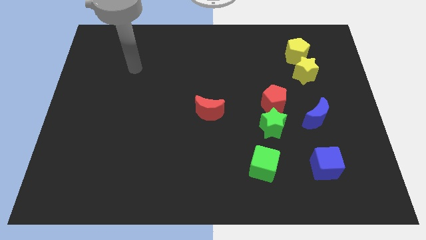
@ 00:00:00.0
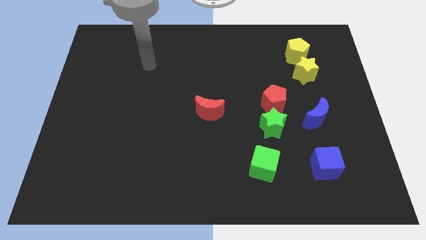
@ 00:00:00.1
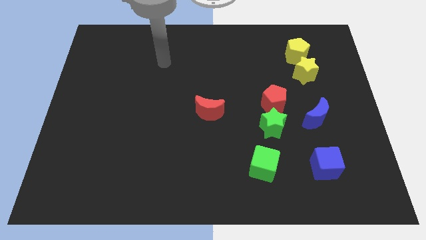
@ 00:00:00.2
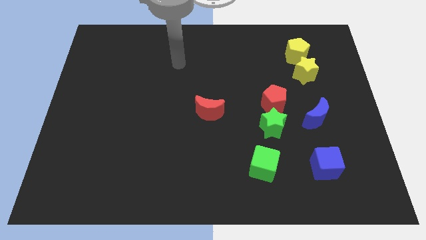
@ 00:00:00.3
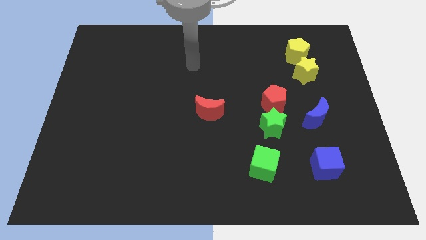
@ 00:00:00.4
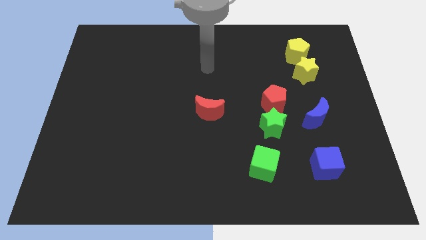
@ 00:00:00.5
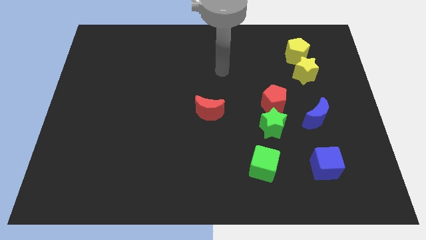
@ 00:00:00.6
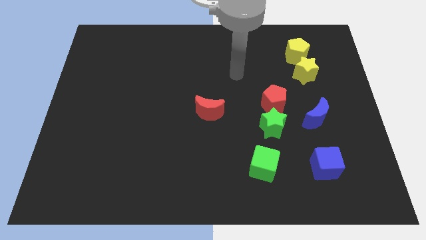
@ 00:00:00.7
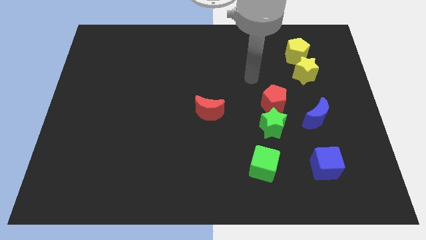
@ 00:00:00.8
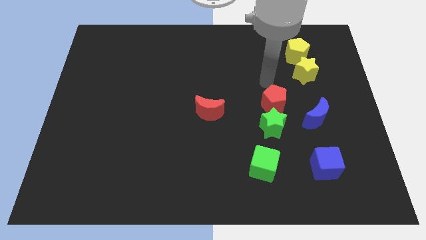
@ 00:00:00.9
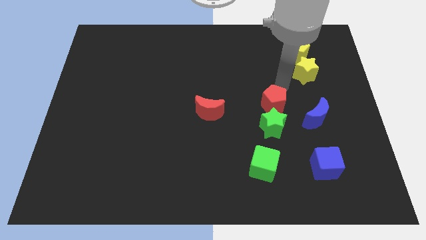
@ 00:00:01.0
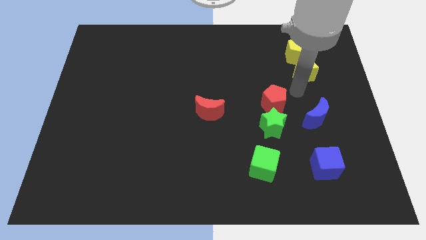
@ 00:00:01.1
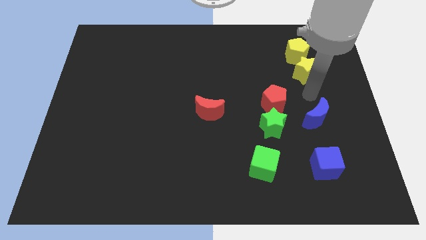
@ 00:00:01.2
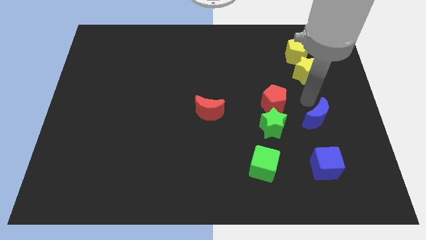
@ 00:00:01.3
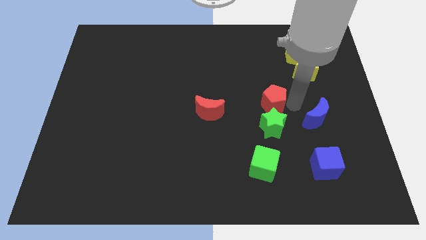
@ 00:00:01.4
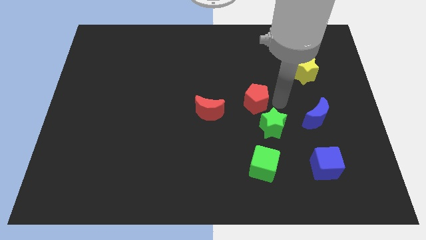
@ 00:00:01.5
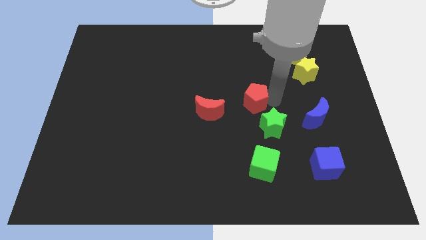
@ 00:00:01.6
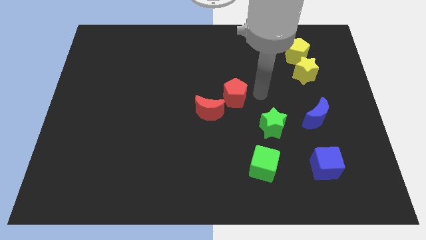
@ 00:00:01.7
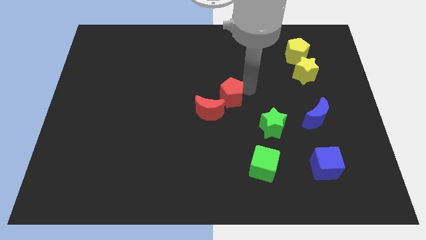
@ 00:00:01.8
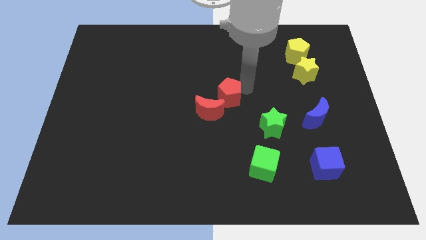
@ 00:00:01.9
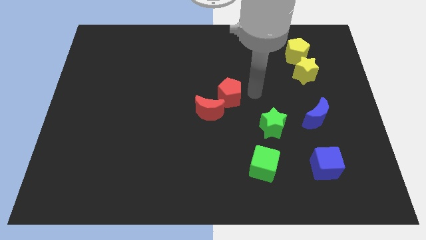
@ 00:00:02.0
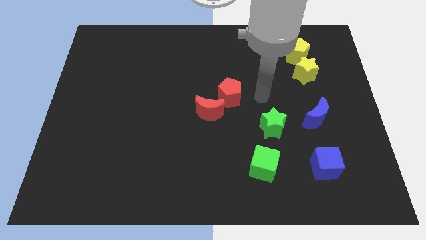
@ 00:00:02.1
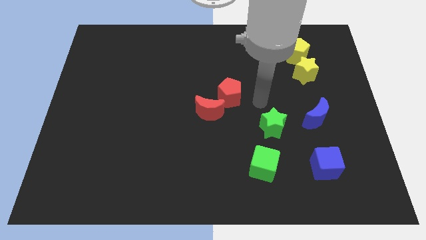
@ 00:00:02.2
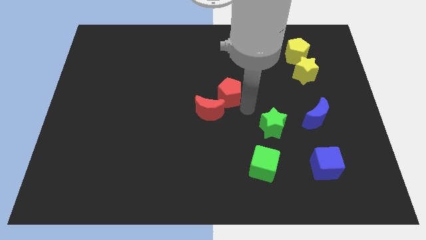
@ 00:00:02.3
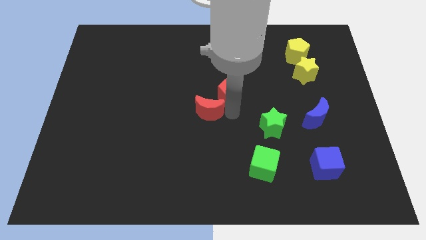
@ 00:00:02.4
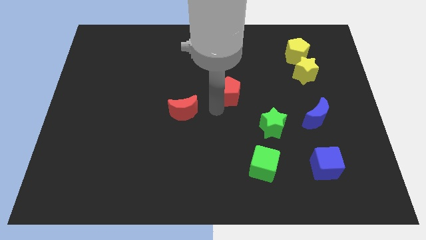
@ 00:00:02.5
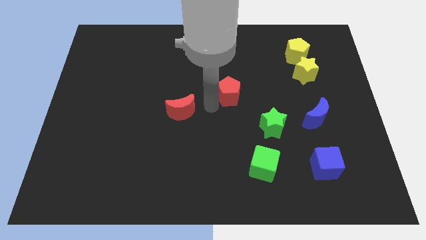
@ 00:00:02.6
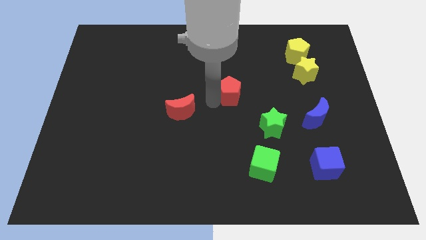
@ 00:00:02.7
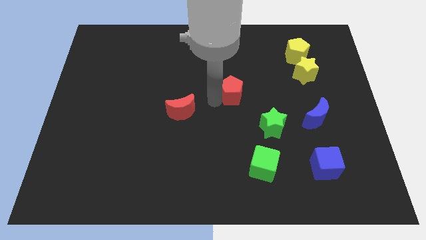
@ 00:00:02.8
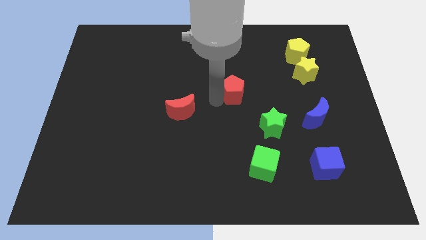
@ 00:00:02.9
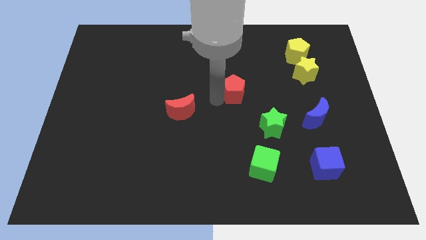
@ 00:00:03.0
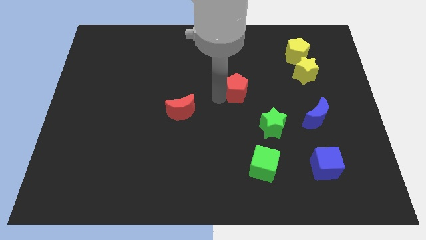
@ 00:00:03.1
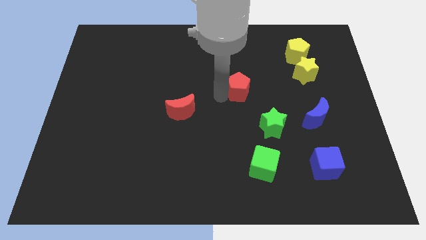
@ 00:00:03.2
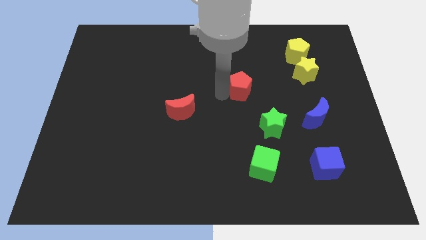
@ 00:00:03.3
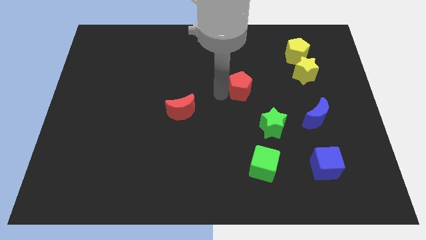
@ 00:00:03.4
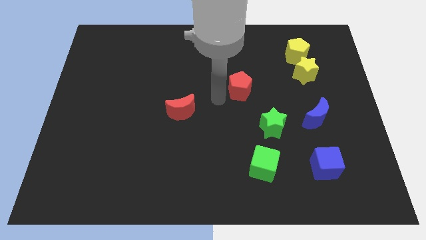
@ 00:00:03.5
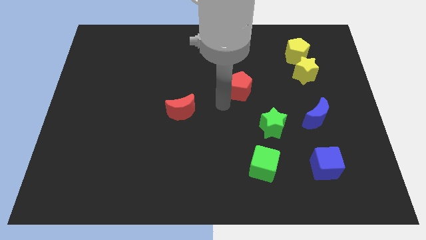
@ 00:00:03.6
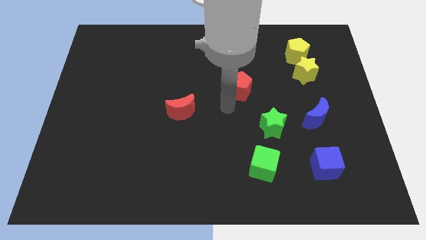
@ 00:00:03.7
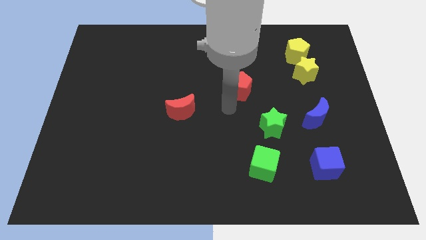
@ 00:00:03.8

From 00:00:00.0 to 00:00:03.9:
place the red pentagon towards the top left to the green star

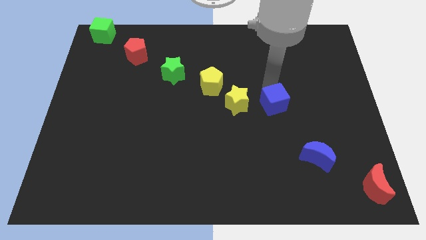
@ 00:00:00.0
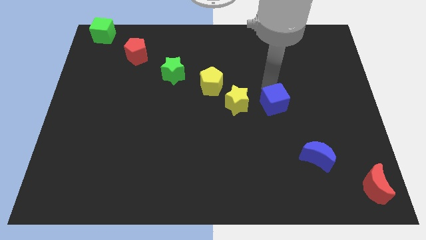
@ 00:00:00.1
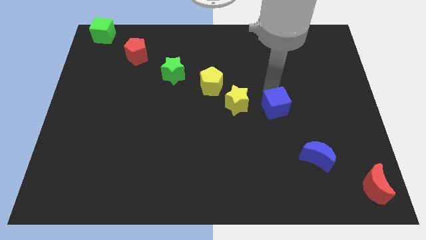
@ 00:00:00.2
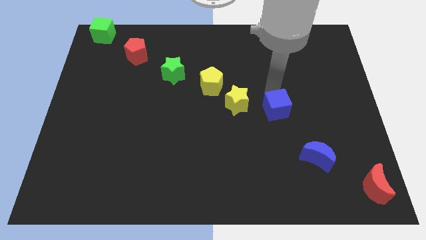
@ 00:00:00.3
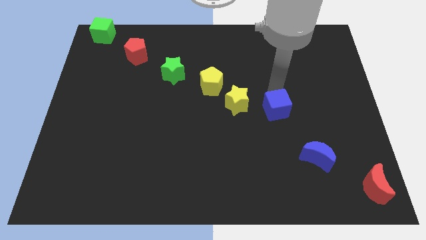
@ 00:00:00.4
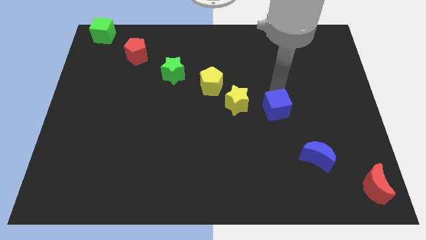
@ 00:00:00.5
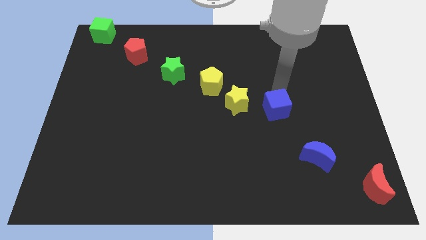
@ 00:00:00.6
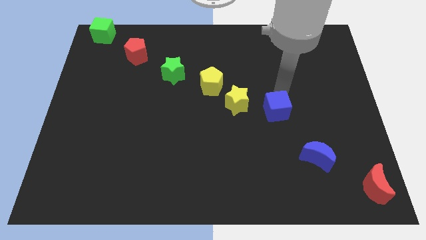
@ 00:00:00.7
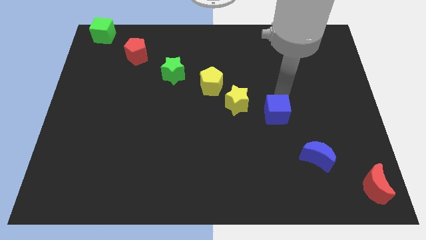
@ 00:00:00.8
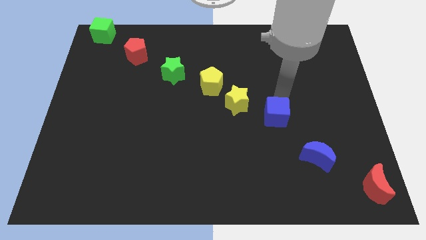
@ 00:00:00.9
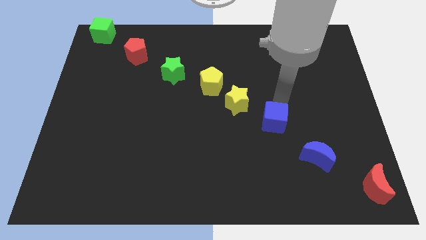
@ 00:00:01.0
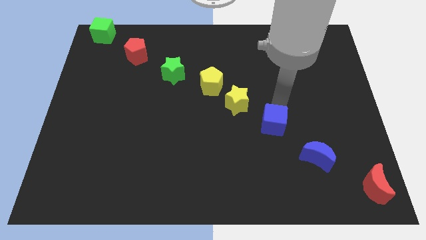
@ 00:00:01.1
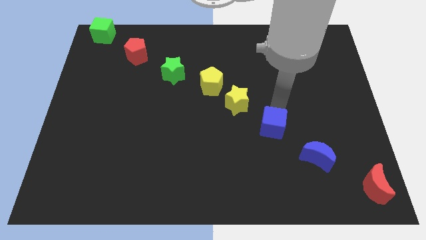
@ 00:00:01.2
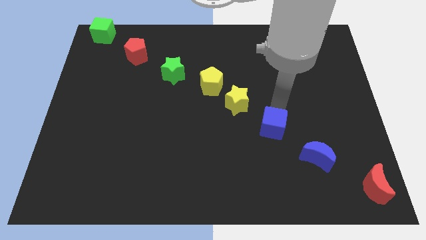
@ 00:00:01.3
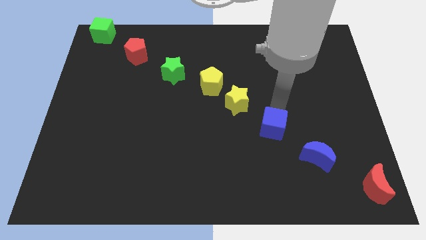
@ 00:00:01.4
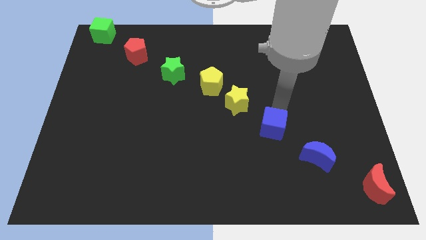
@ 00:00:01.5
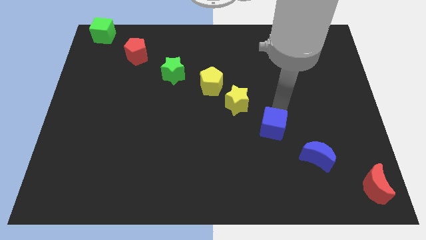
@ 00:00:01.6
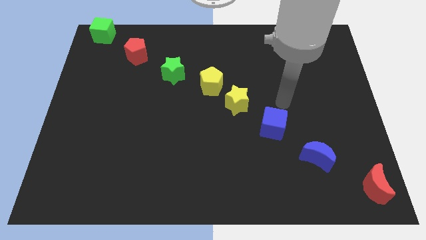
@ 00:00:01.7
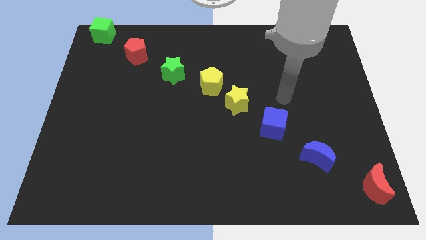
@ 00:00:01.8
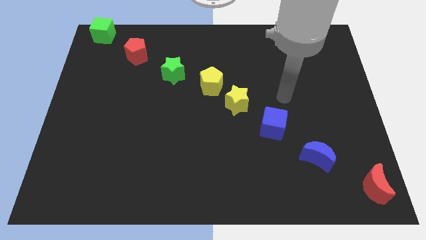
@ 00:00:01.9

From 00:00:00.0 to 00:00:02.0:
place the blue cube in between the yellow star and blue moon

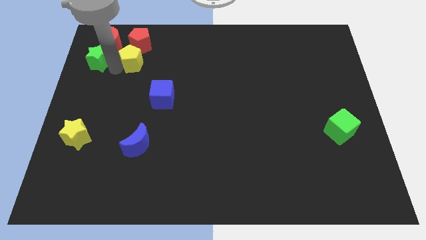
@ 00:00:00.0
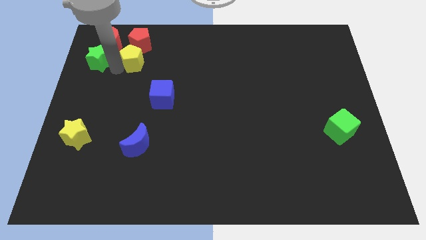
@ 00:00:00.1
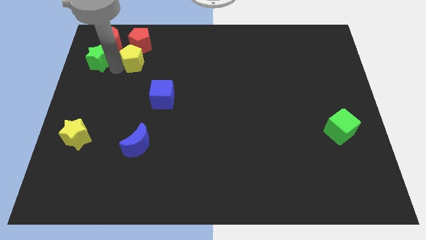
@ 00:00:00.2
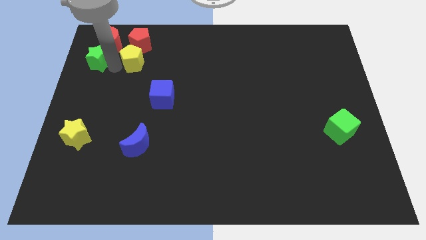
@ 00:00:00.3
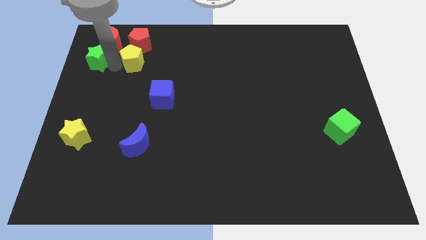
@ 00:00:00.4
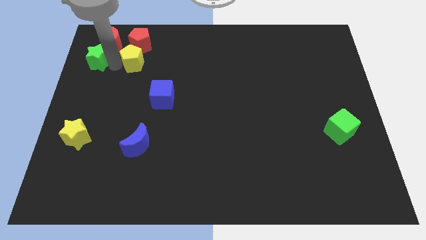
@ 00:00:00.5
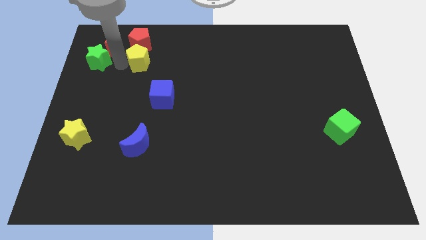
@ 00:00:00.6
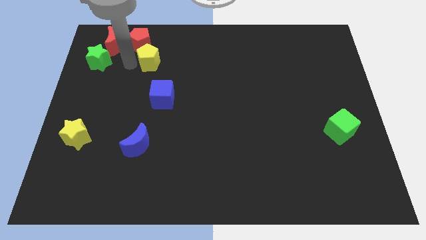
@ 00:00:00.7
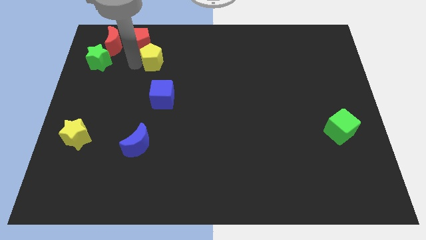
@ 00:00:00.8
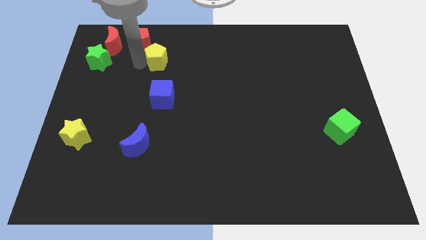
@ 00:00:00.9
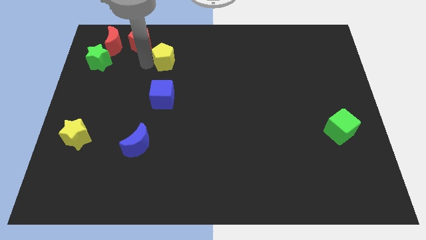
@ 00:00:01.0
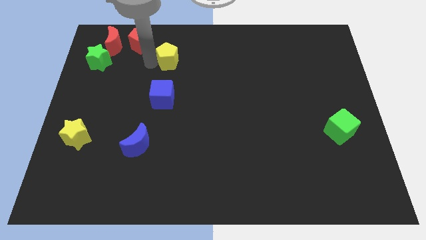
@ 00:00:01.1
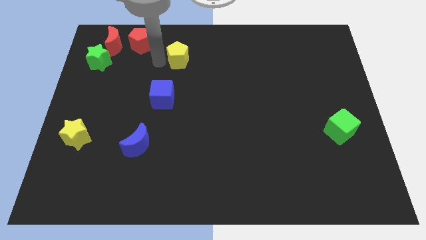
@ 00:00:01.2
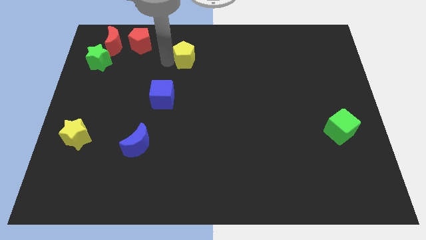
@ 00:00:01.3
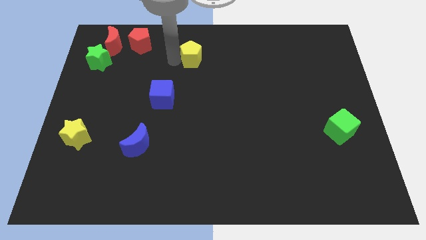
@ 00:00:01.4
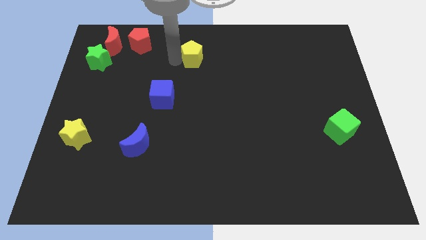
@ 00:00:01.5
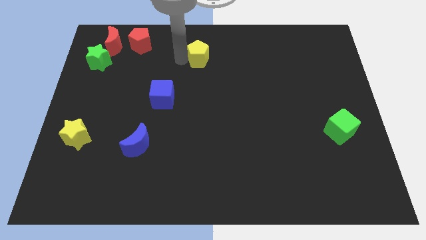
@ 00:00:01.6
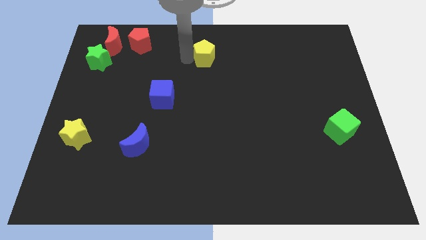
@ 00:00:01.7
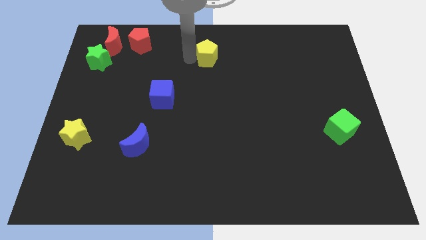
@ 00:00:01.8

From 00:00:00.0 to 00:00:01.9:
push the yellow pentagon towards the top center

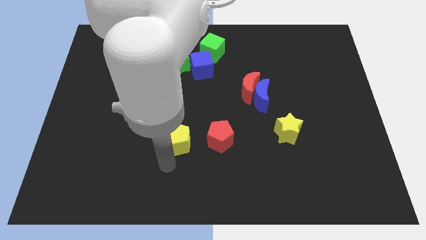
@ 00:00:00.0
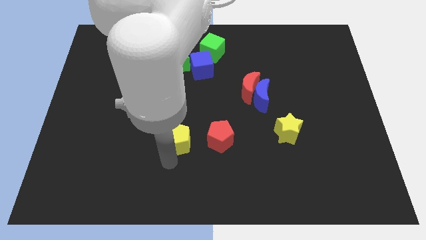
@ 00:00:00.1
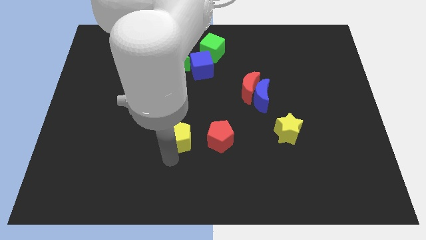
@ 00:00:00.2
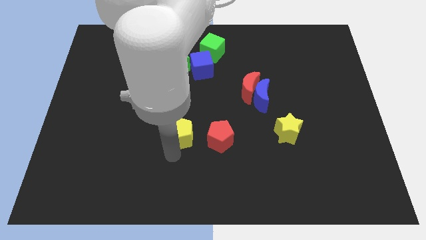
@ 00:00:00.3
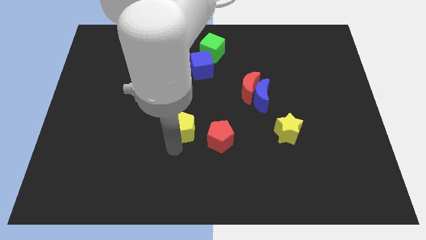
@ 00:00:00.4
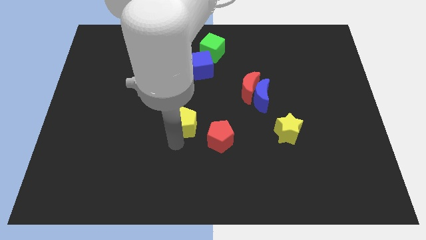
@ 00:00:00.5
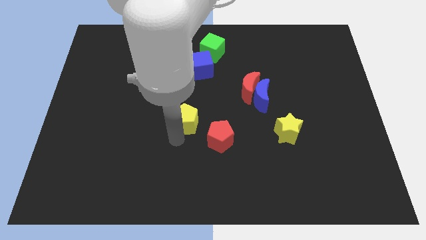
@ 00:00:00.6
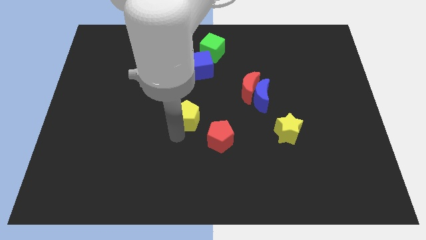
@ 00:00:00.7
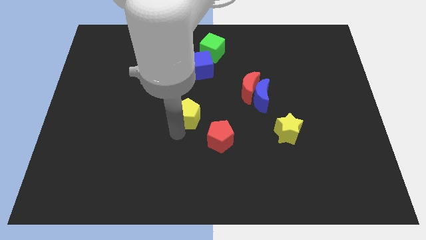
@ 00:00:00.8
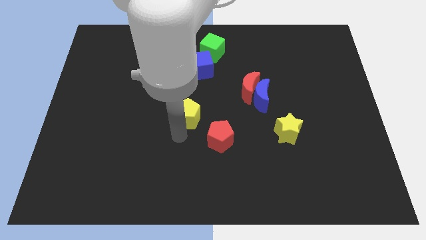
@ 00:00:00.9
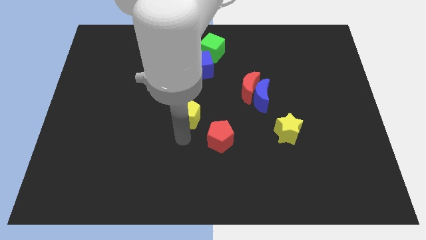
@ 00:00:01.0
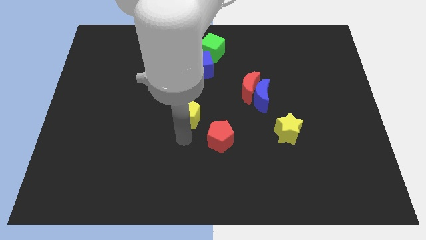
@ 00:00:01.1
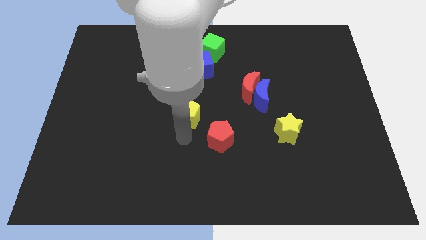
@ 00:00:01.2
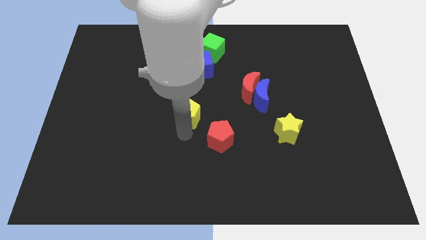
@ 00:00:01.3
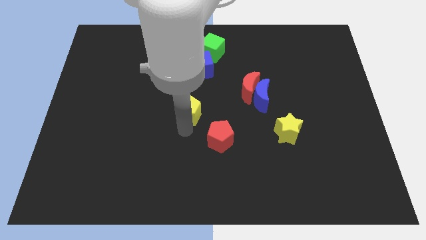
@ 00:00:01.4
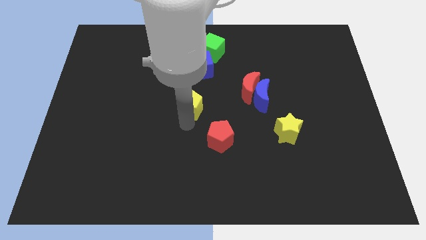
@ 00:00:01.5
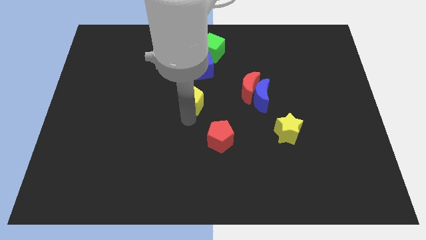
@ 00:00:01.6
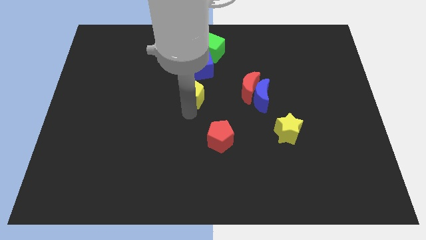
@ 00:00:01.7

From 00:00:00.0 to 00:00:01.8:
place yellow pentagon to the center of board
